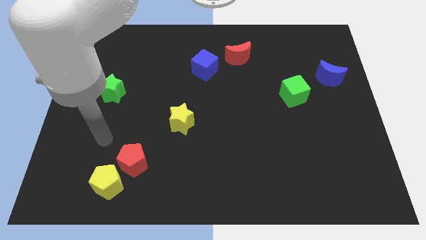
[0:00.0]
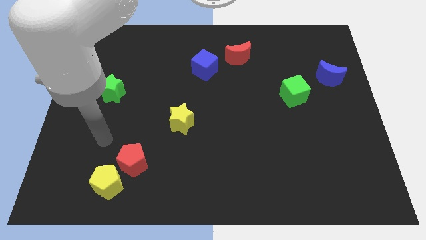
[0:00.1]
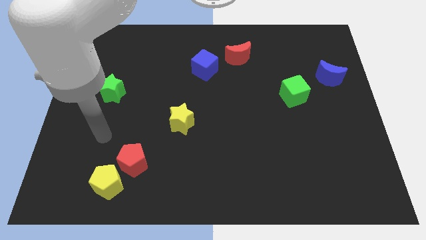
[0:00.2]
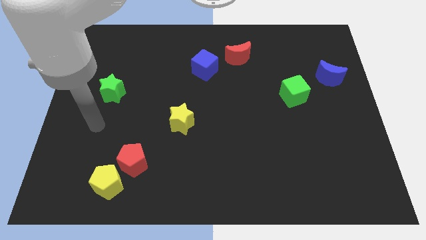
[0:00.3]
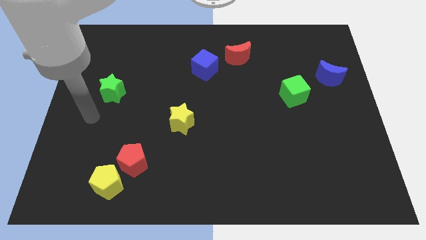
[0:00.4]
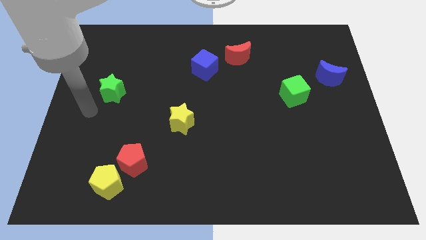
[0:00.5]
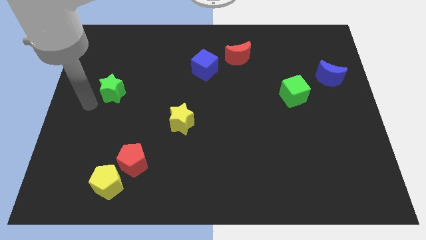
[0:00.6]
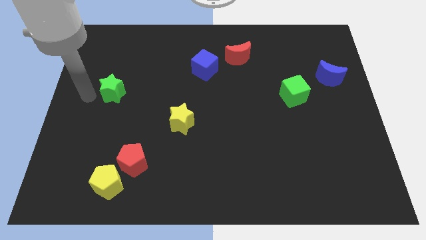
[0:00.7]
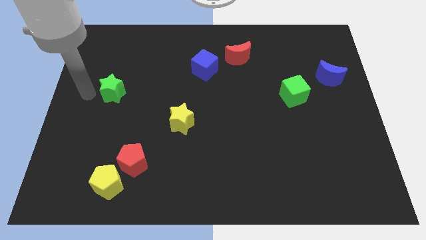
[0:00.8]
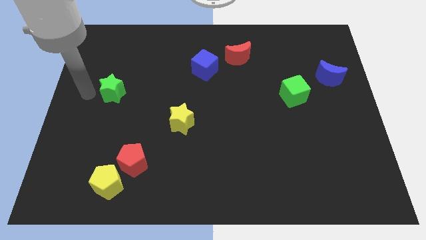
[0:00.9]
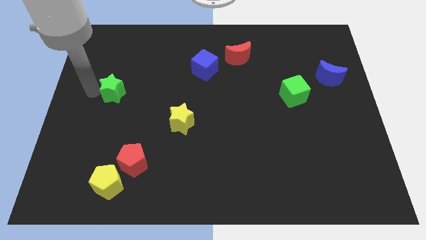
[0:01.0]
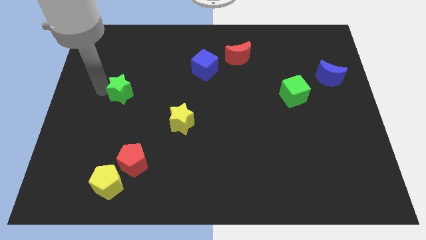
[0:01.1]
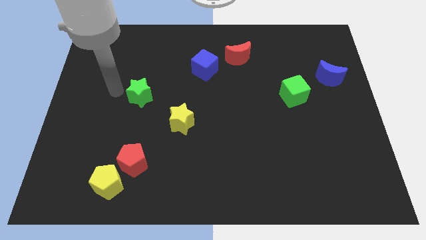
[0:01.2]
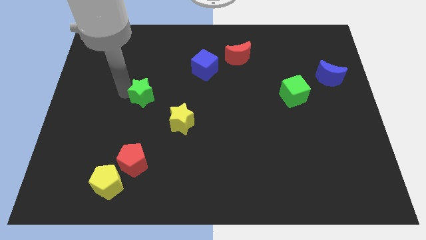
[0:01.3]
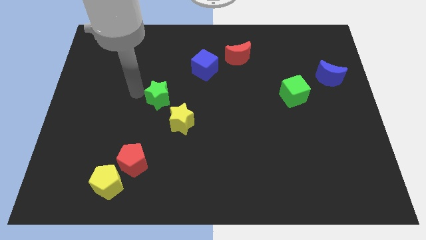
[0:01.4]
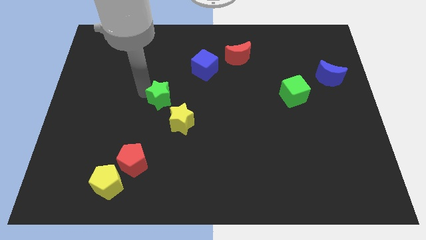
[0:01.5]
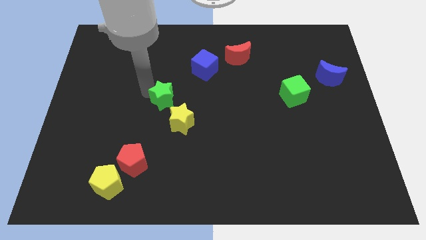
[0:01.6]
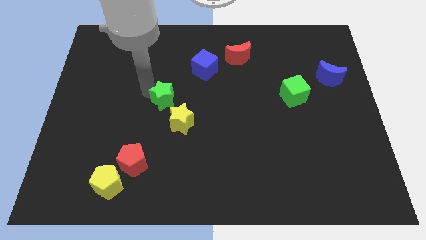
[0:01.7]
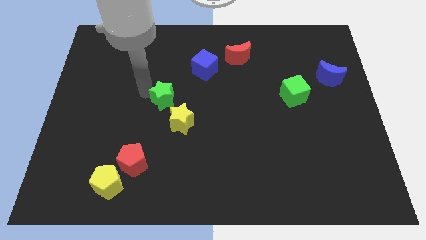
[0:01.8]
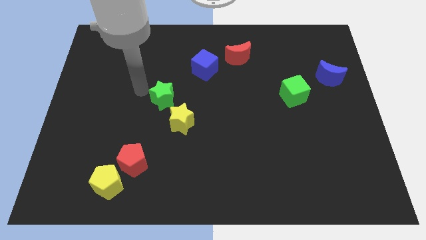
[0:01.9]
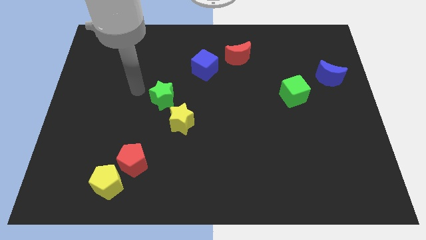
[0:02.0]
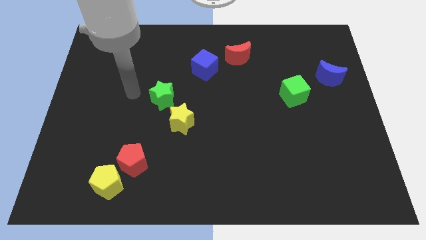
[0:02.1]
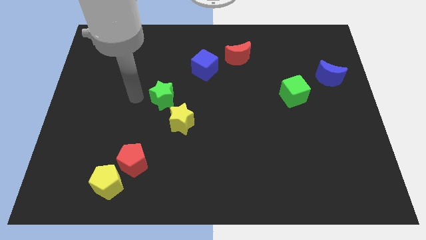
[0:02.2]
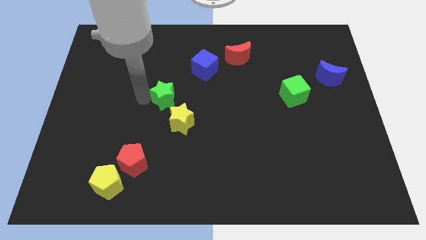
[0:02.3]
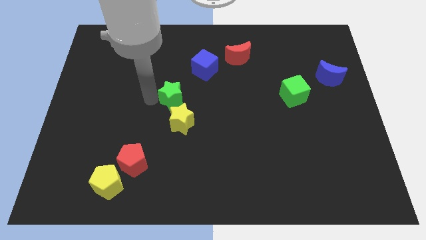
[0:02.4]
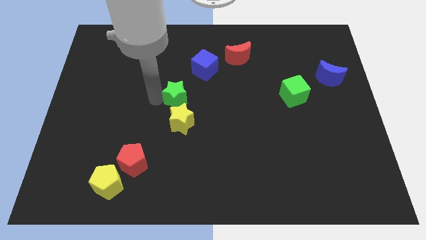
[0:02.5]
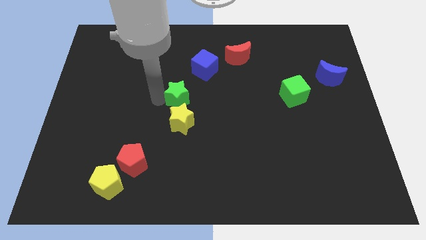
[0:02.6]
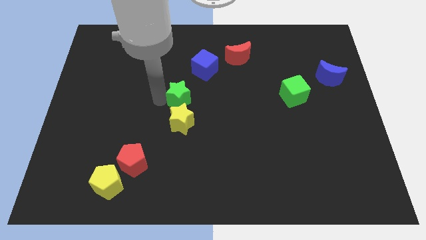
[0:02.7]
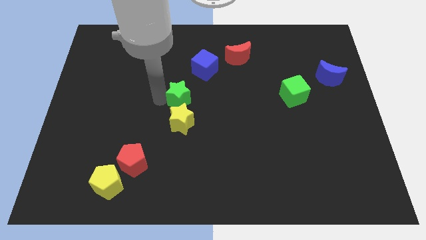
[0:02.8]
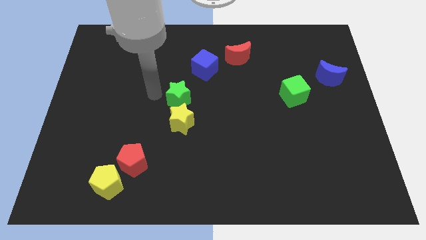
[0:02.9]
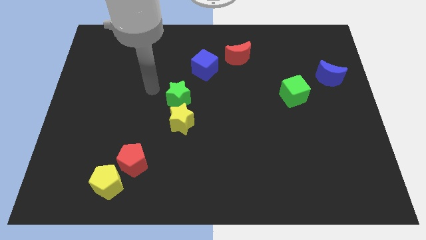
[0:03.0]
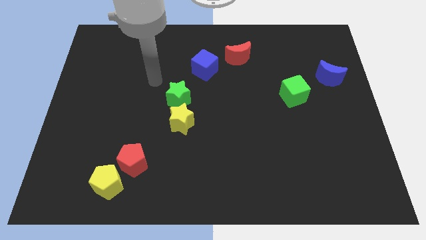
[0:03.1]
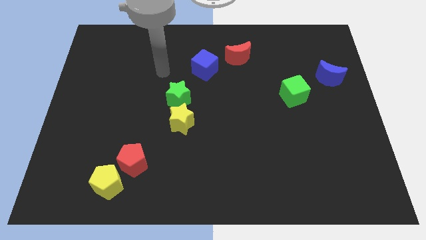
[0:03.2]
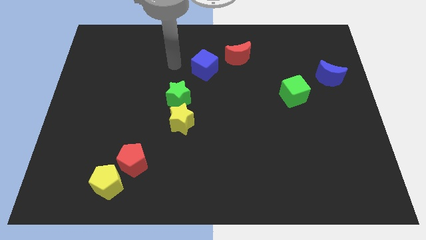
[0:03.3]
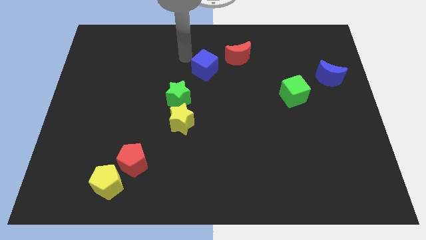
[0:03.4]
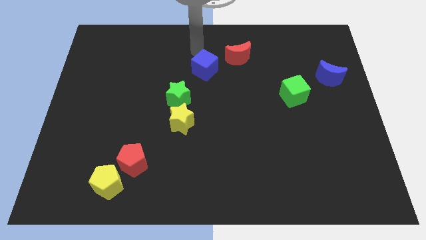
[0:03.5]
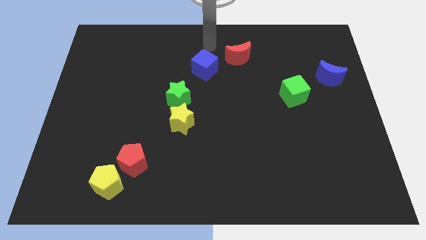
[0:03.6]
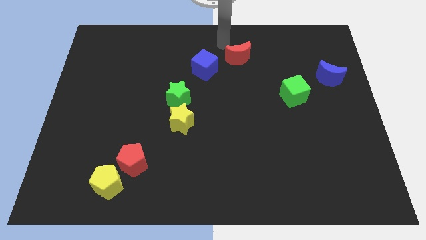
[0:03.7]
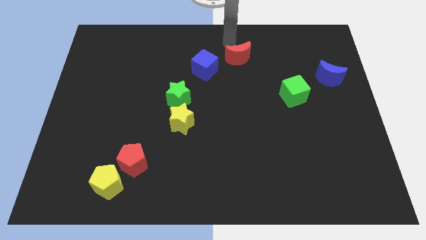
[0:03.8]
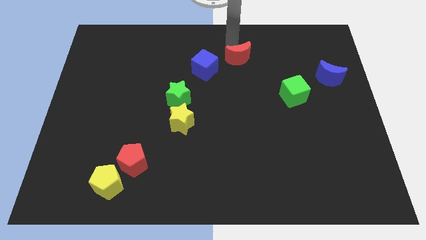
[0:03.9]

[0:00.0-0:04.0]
move green star diagonally above yellow star

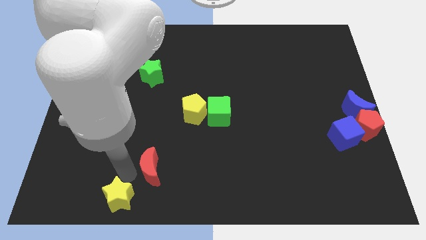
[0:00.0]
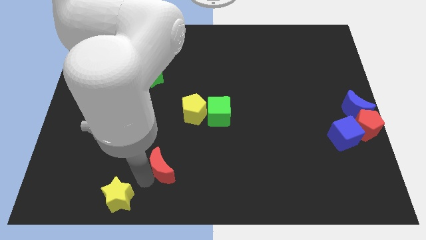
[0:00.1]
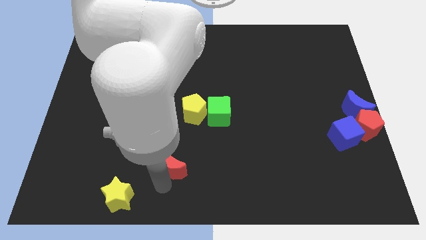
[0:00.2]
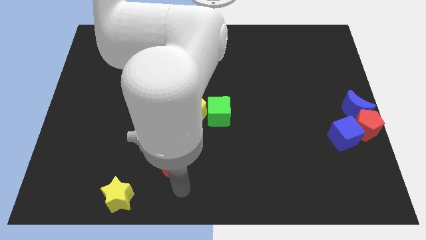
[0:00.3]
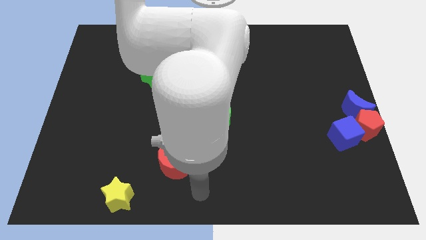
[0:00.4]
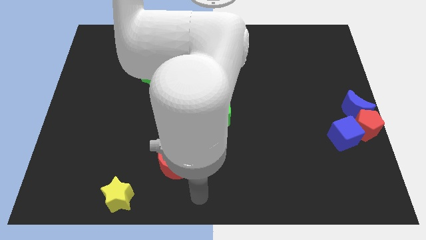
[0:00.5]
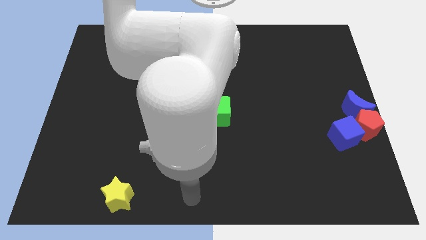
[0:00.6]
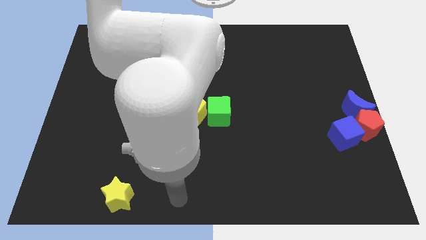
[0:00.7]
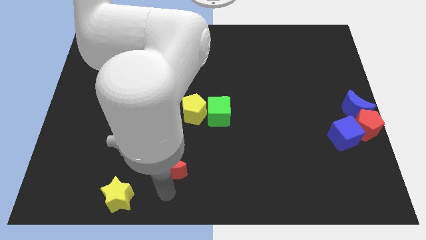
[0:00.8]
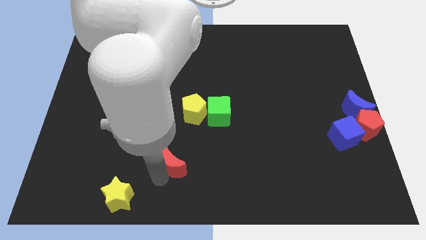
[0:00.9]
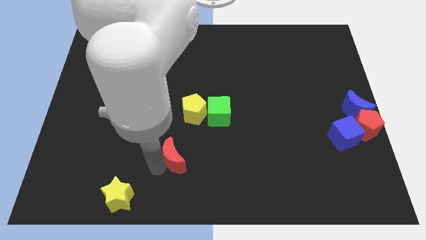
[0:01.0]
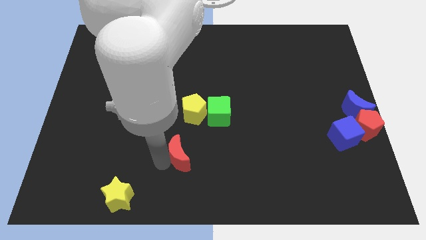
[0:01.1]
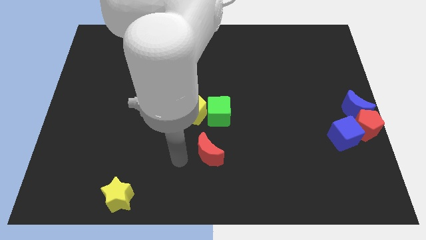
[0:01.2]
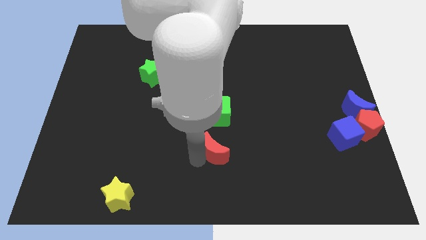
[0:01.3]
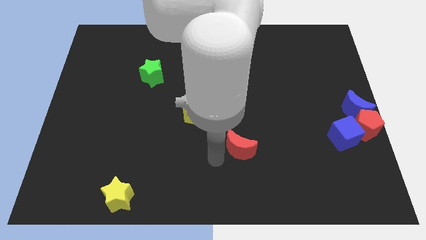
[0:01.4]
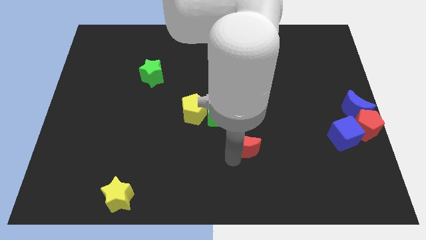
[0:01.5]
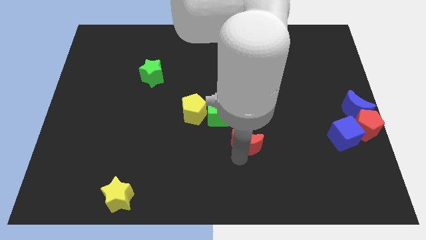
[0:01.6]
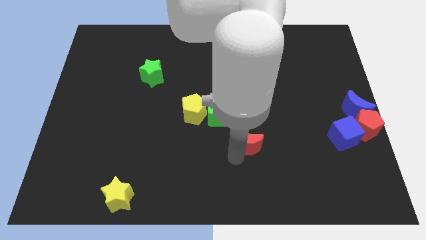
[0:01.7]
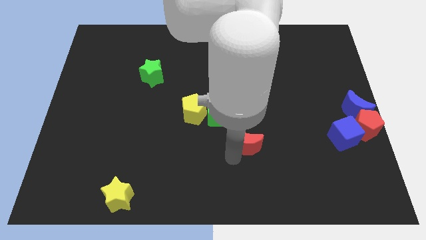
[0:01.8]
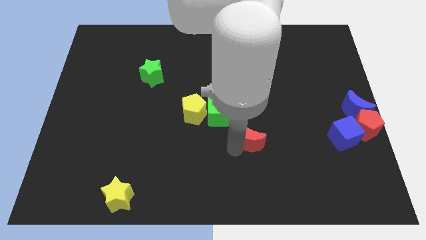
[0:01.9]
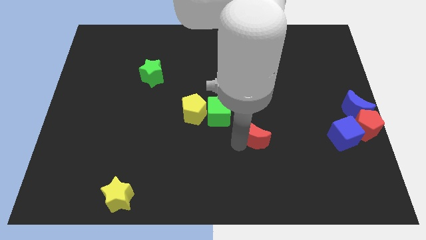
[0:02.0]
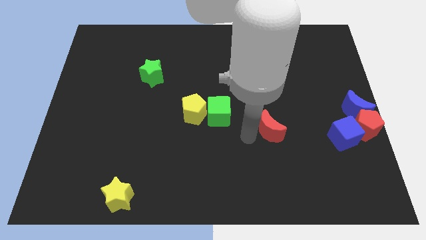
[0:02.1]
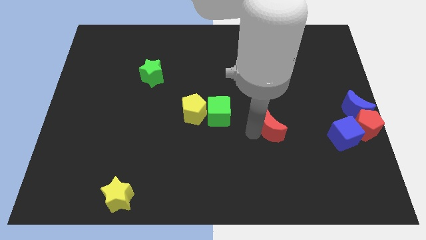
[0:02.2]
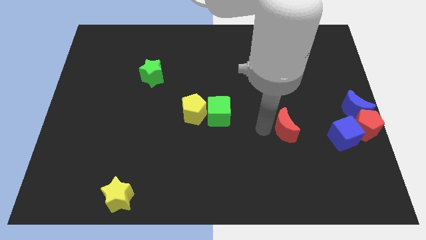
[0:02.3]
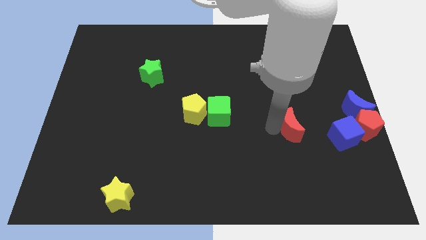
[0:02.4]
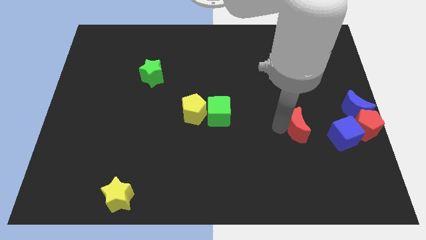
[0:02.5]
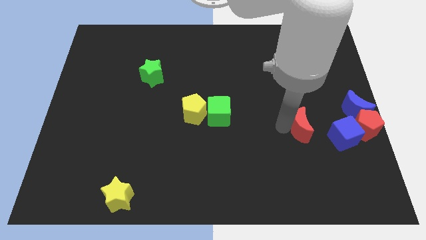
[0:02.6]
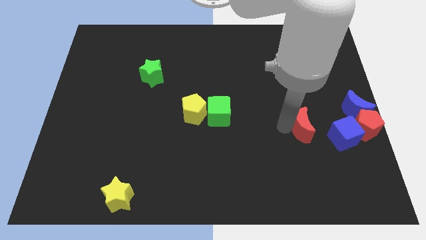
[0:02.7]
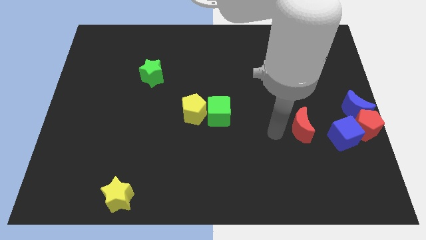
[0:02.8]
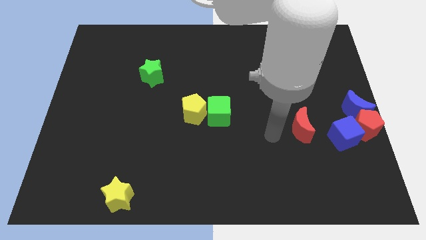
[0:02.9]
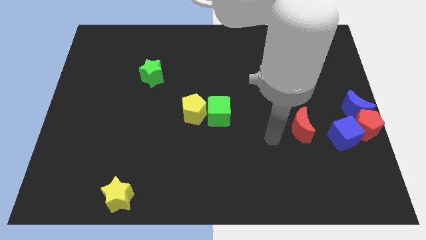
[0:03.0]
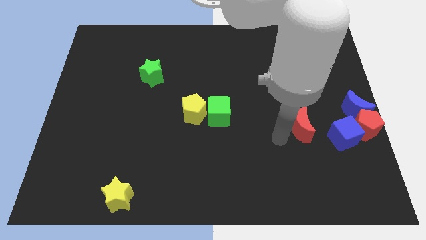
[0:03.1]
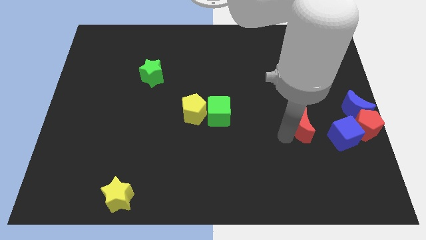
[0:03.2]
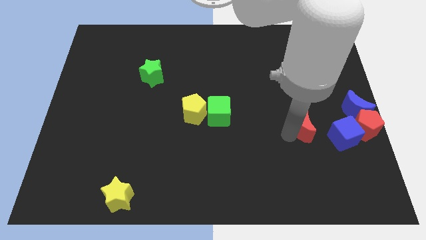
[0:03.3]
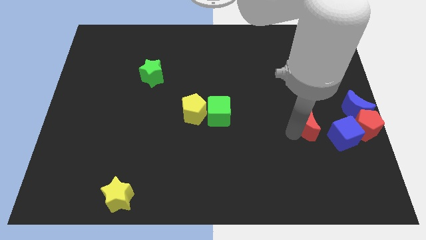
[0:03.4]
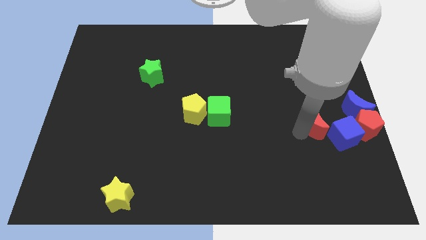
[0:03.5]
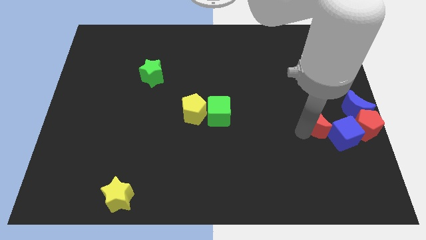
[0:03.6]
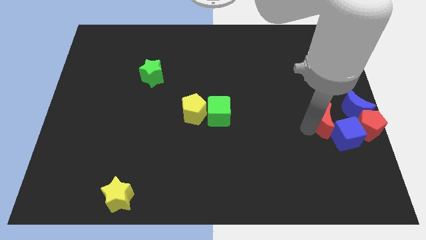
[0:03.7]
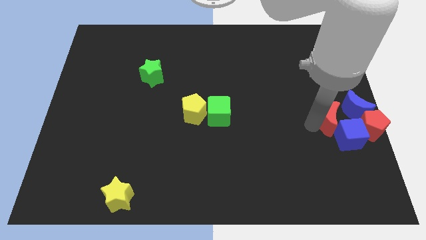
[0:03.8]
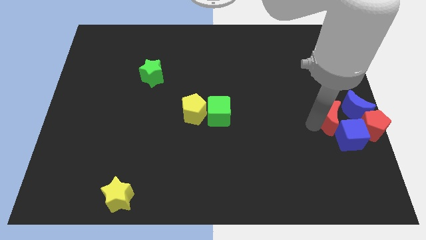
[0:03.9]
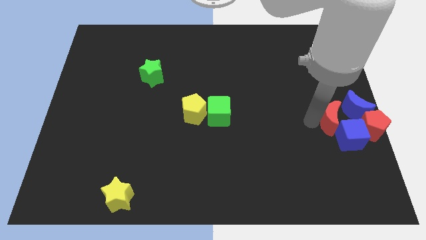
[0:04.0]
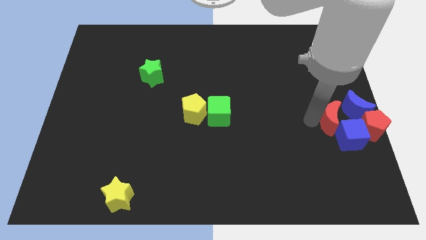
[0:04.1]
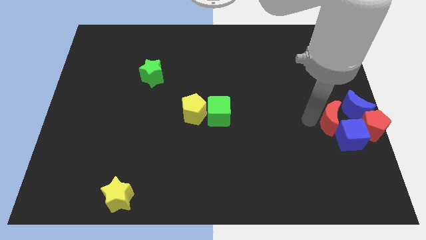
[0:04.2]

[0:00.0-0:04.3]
push the red crescent into the blue cube

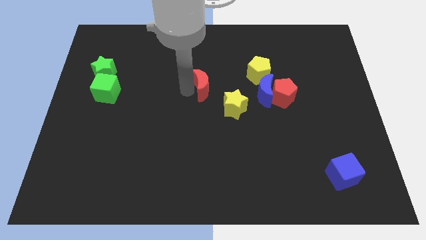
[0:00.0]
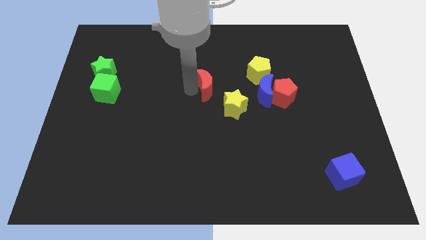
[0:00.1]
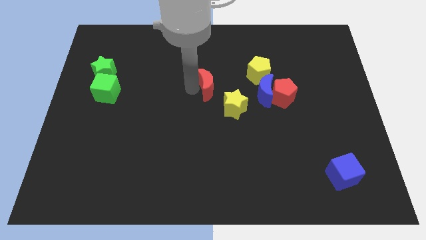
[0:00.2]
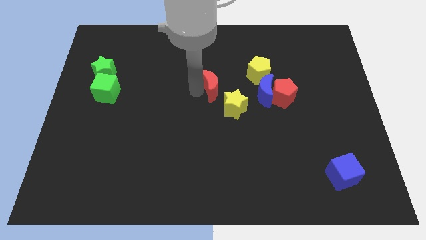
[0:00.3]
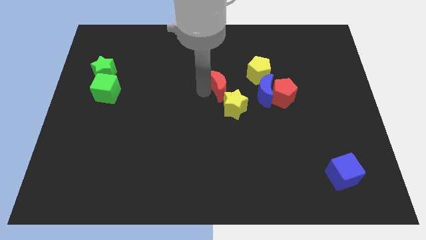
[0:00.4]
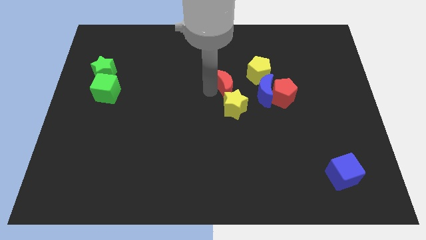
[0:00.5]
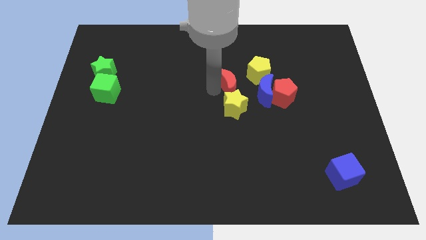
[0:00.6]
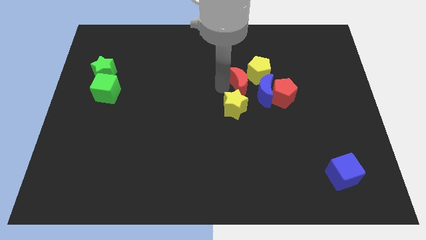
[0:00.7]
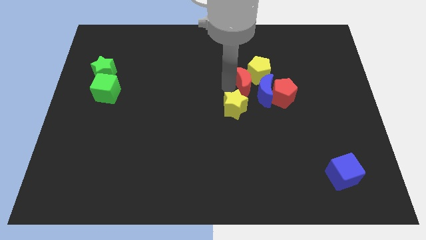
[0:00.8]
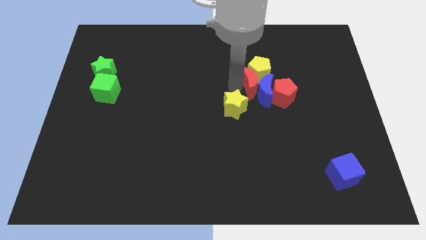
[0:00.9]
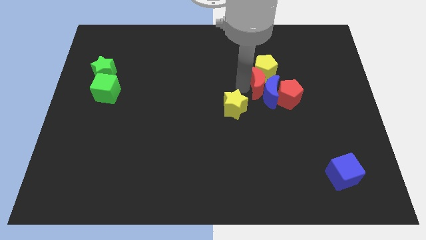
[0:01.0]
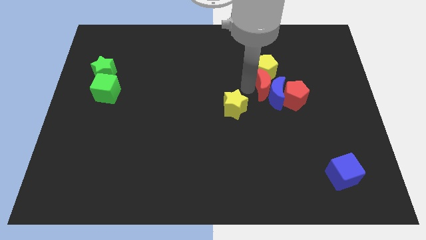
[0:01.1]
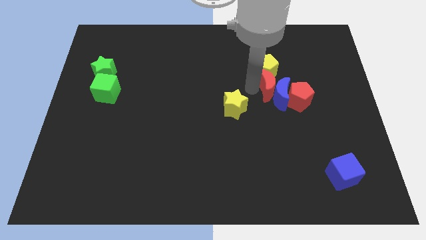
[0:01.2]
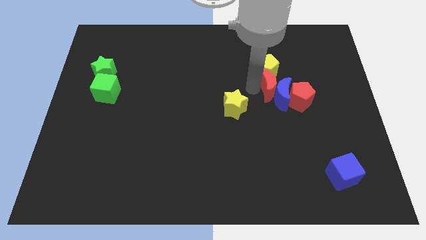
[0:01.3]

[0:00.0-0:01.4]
push the red crescent into the blue crescent
